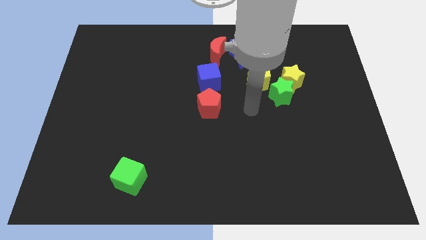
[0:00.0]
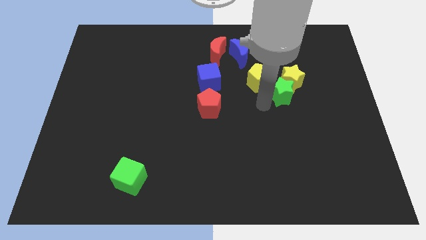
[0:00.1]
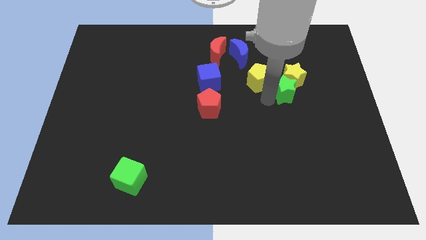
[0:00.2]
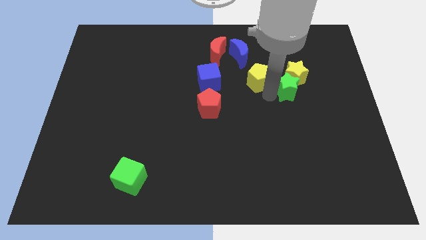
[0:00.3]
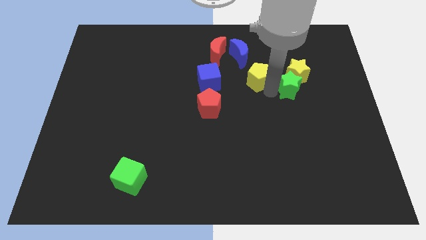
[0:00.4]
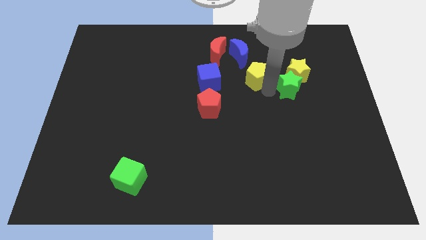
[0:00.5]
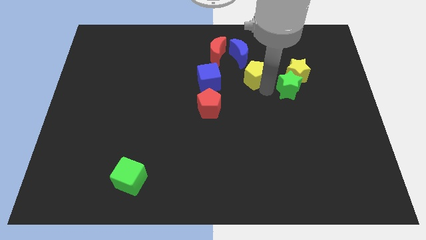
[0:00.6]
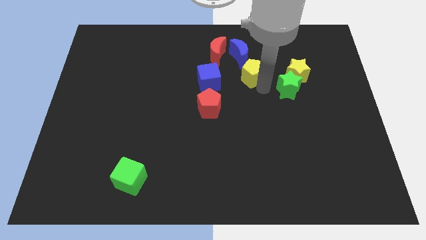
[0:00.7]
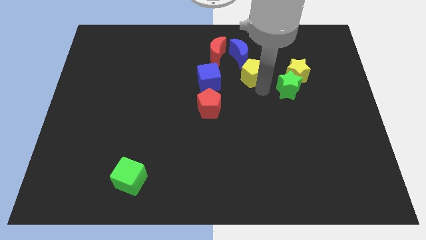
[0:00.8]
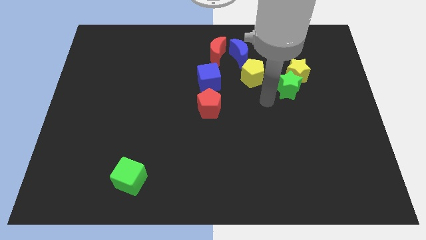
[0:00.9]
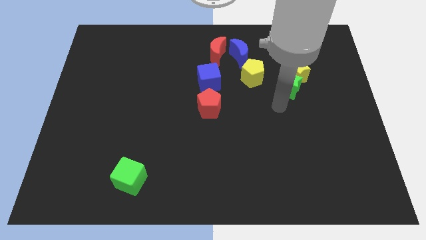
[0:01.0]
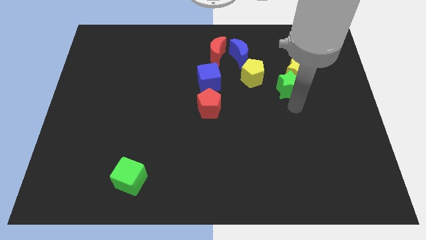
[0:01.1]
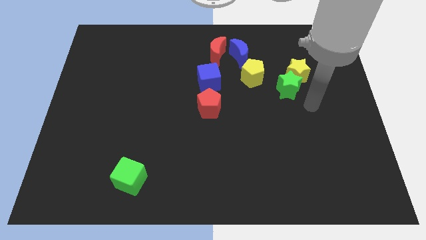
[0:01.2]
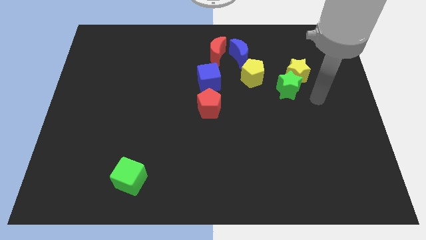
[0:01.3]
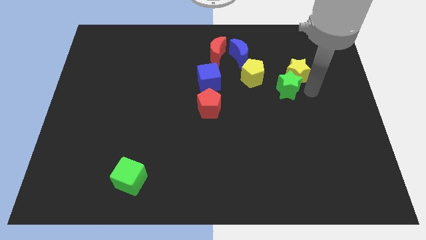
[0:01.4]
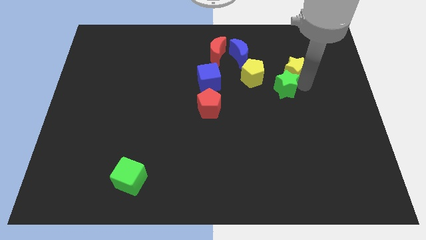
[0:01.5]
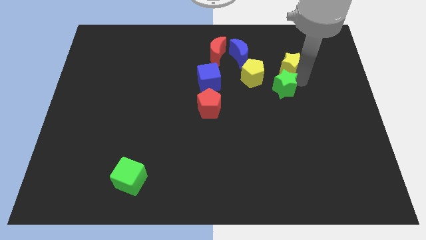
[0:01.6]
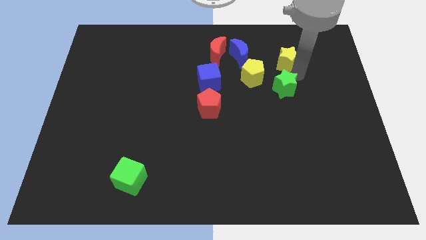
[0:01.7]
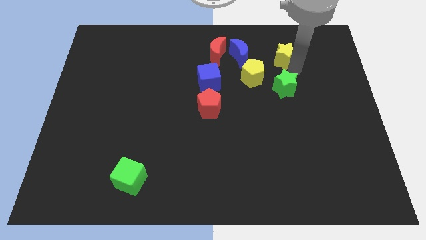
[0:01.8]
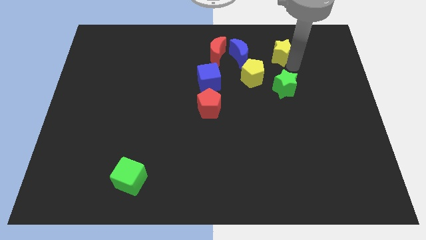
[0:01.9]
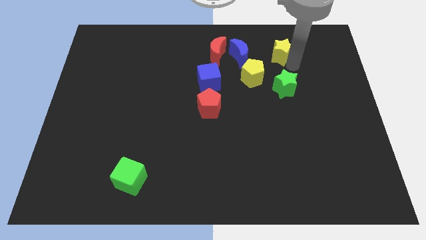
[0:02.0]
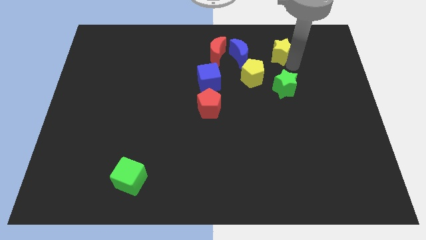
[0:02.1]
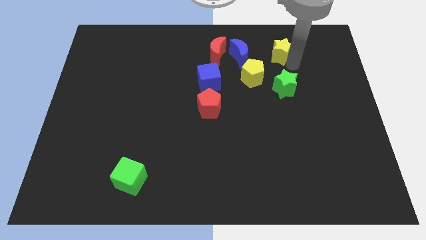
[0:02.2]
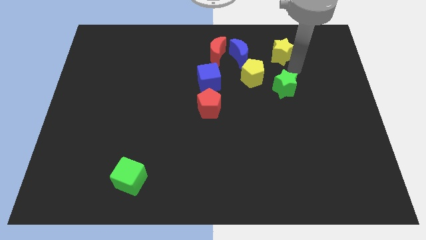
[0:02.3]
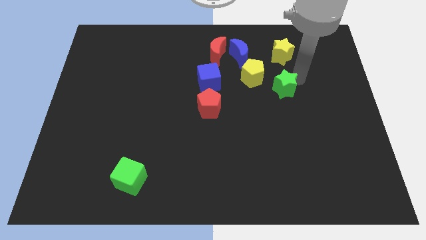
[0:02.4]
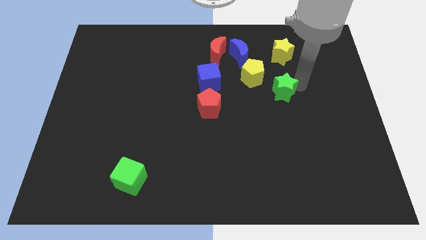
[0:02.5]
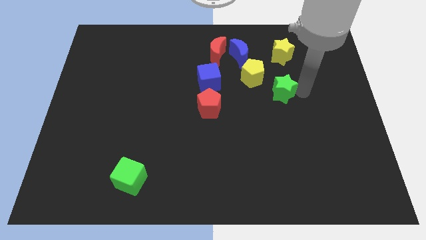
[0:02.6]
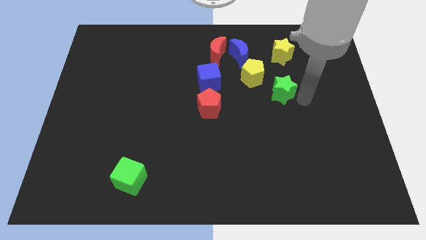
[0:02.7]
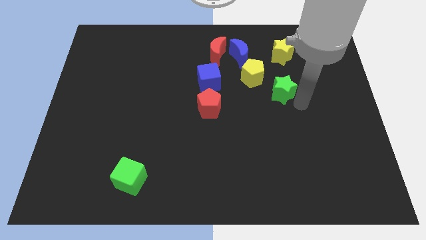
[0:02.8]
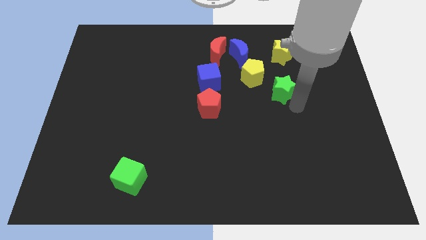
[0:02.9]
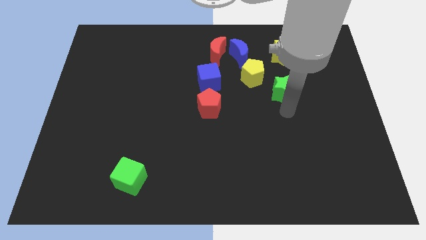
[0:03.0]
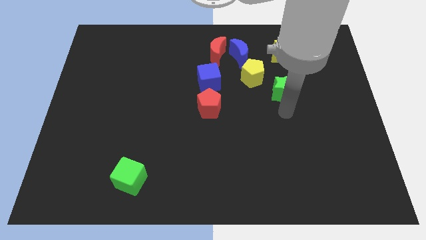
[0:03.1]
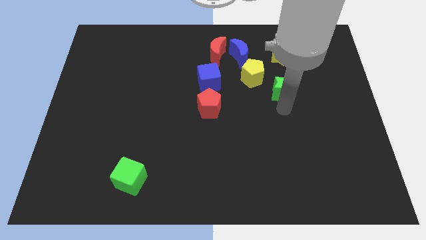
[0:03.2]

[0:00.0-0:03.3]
separate the yellow star and the green star

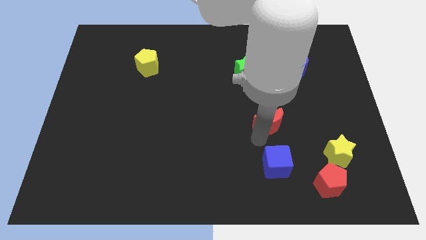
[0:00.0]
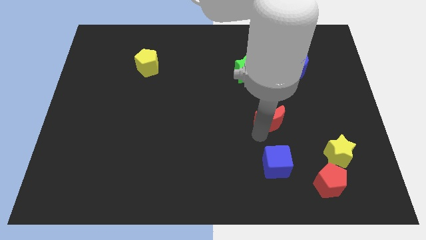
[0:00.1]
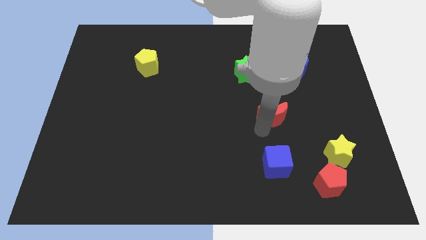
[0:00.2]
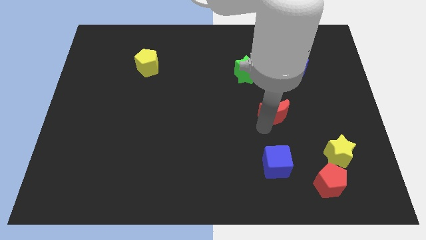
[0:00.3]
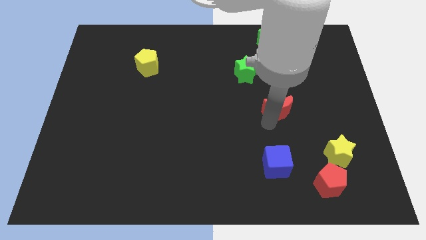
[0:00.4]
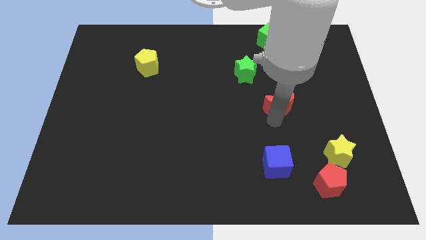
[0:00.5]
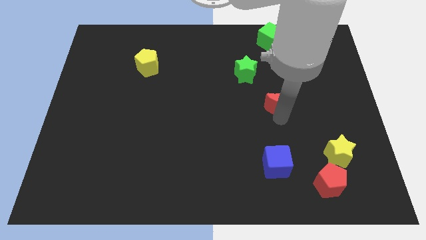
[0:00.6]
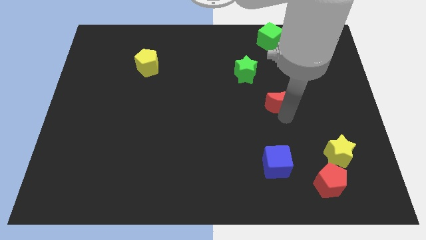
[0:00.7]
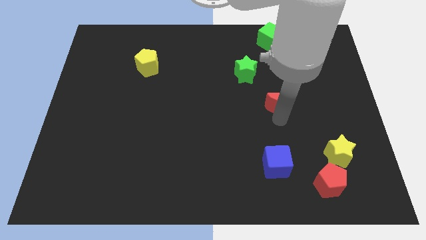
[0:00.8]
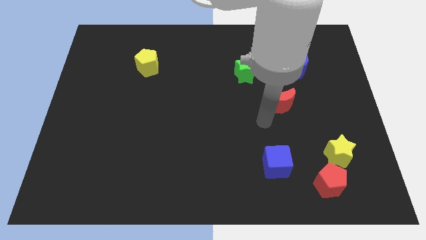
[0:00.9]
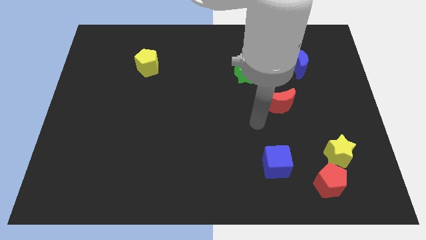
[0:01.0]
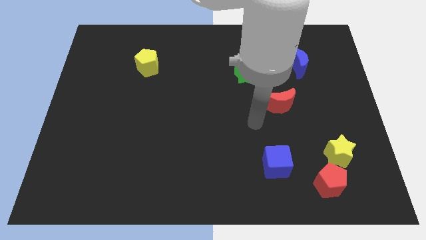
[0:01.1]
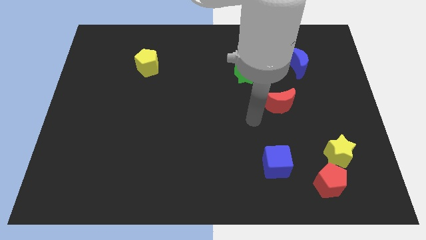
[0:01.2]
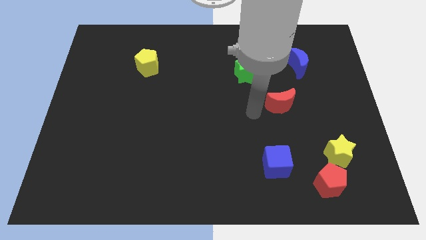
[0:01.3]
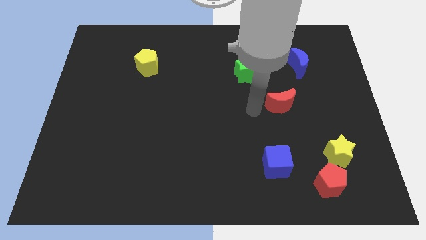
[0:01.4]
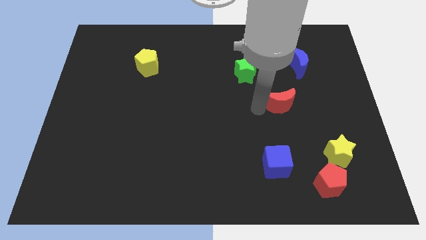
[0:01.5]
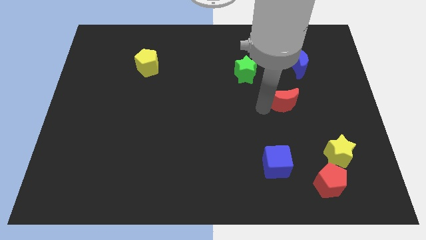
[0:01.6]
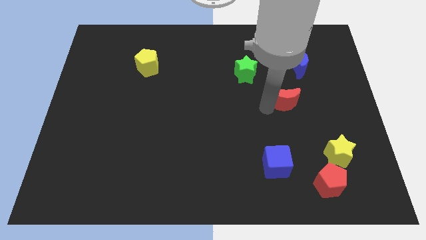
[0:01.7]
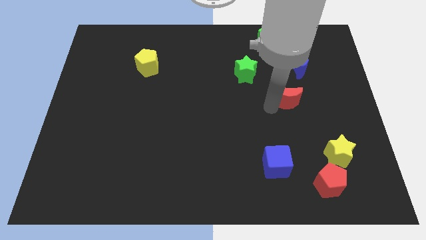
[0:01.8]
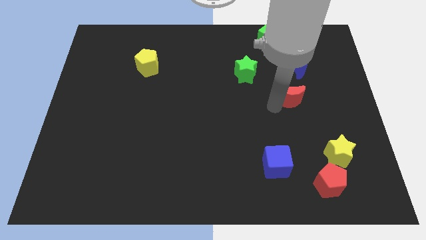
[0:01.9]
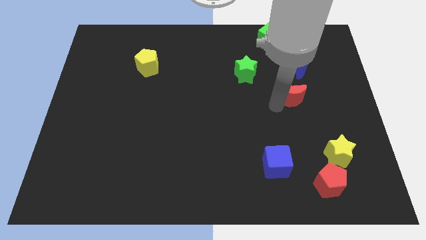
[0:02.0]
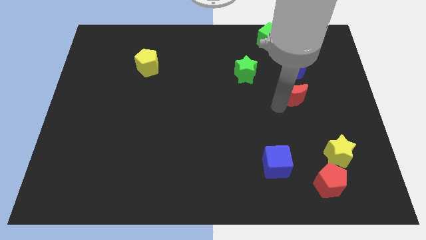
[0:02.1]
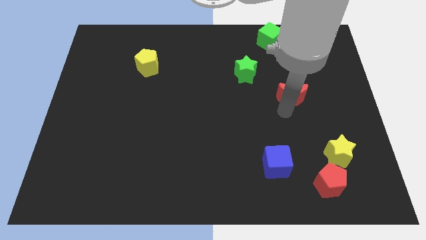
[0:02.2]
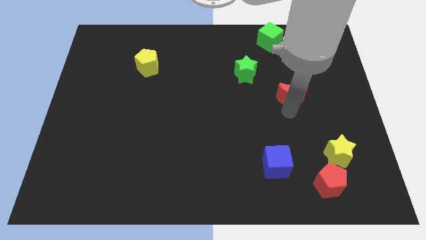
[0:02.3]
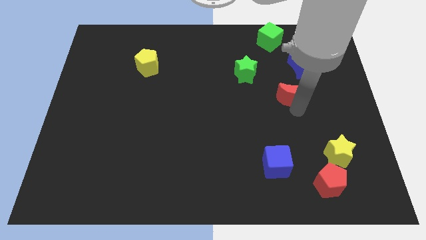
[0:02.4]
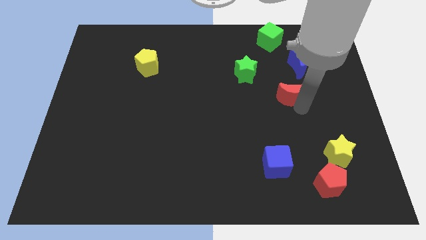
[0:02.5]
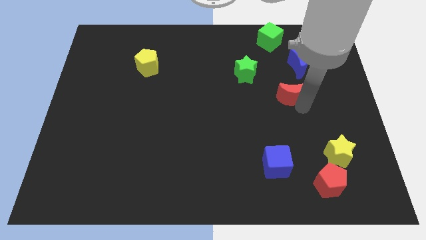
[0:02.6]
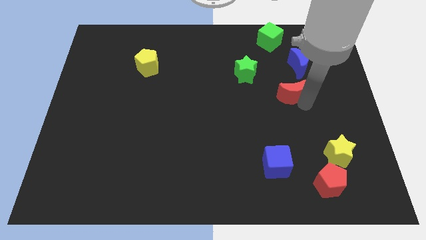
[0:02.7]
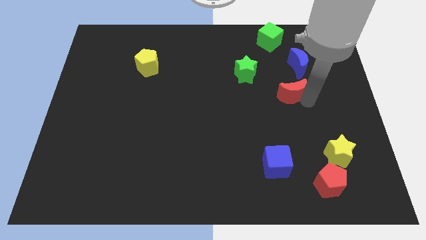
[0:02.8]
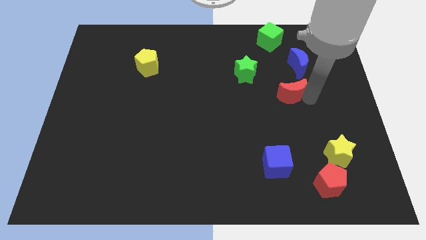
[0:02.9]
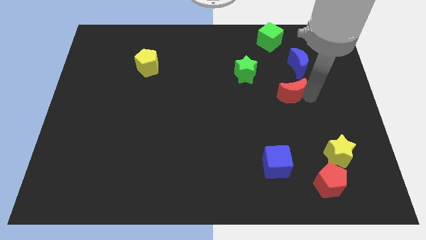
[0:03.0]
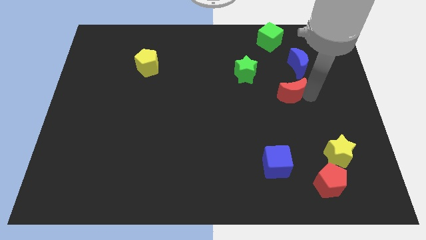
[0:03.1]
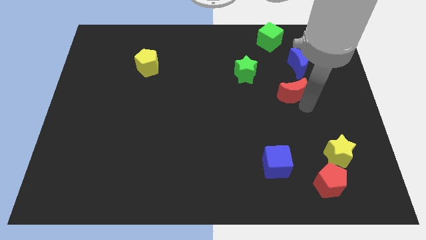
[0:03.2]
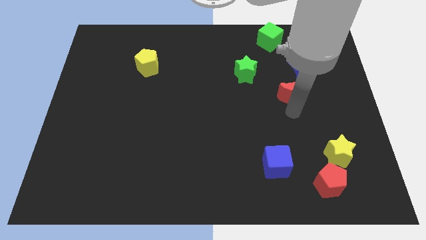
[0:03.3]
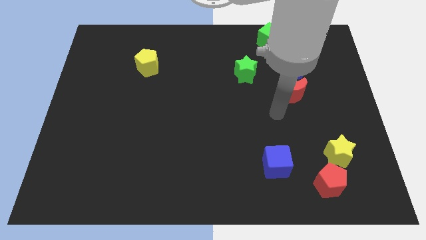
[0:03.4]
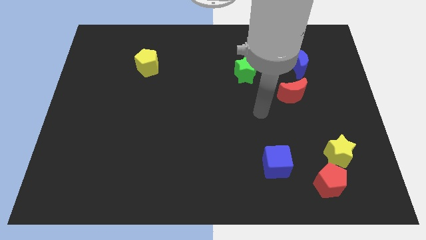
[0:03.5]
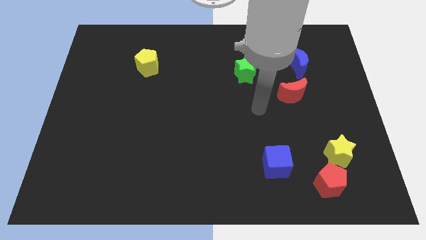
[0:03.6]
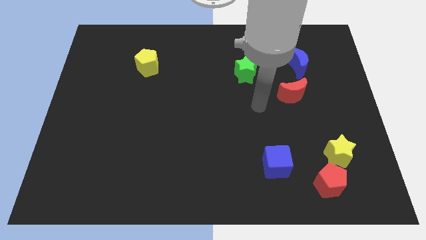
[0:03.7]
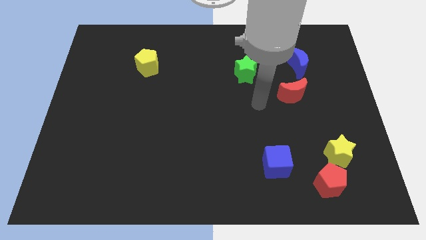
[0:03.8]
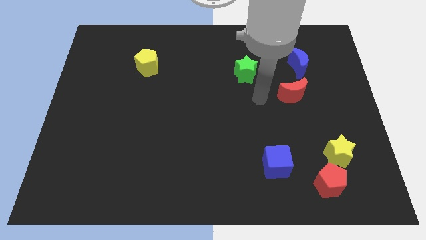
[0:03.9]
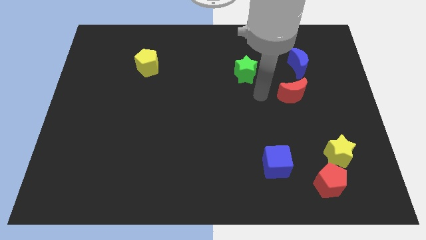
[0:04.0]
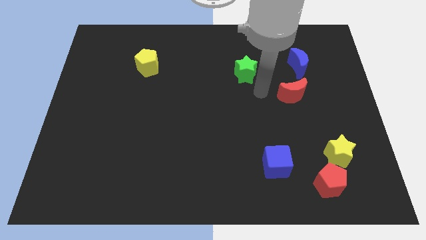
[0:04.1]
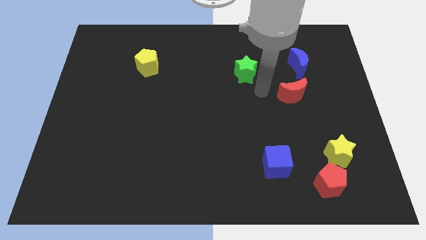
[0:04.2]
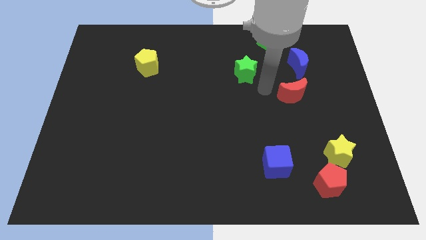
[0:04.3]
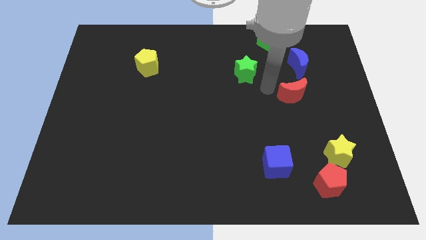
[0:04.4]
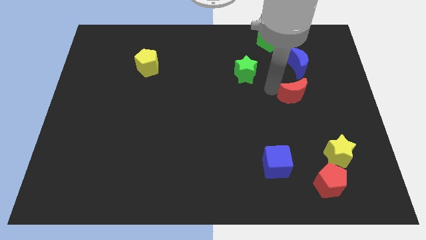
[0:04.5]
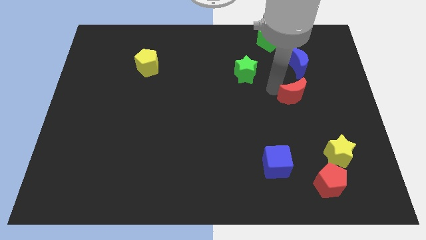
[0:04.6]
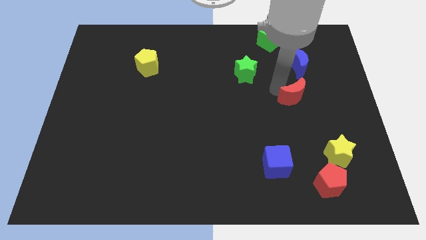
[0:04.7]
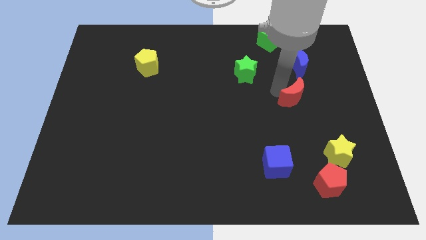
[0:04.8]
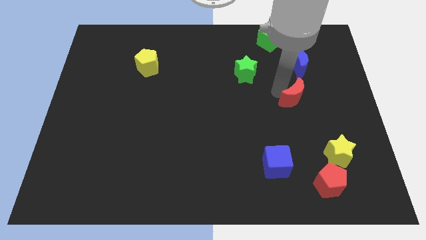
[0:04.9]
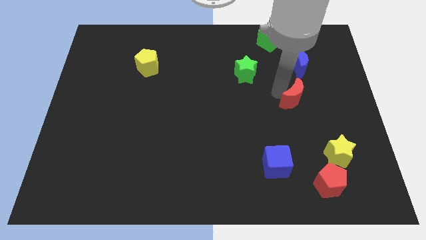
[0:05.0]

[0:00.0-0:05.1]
push the red crescent towards the diagonal left to the blue crescent

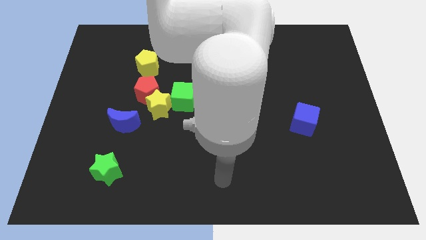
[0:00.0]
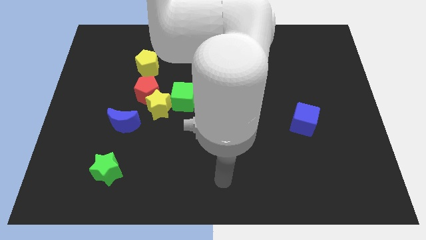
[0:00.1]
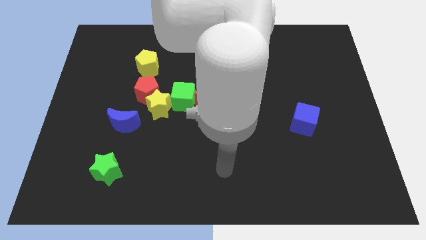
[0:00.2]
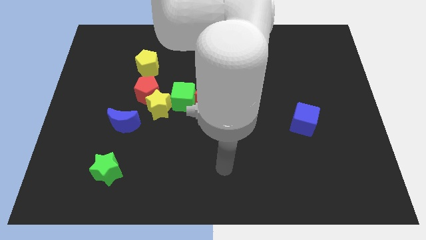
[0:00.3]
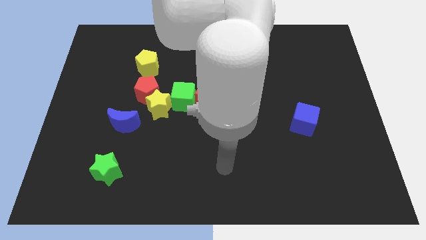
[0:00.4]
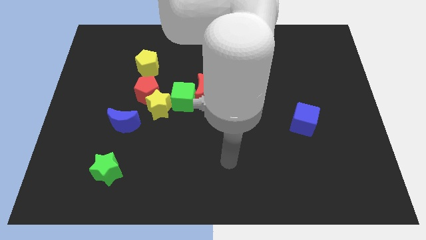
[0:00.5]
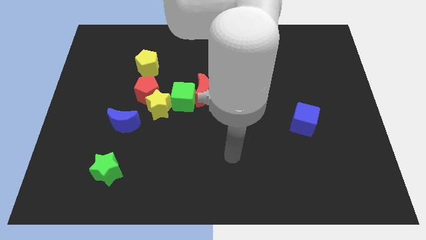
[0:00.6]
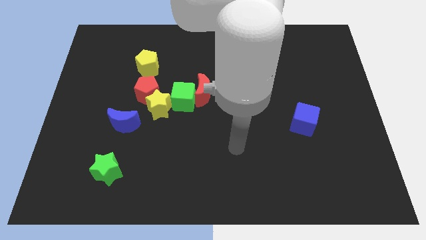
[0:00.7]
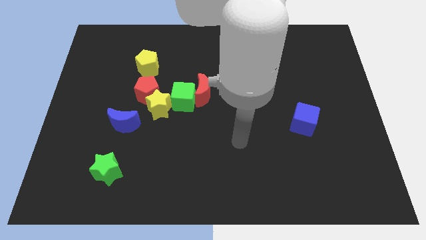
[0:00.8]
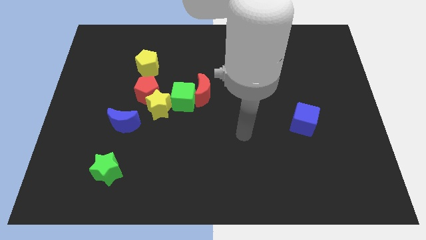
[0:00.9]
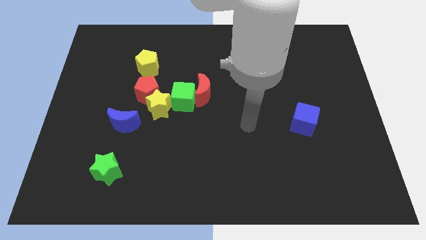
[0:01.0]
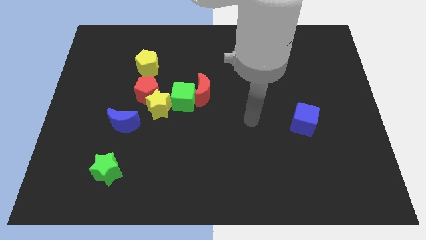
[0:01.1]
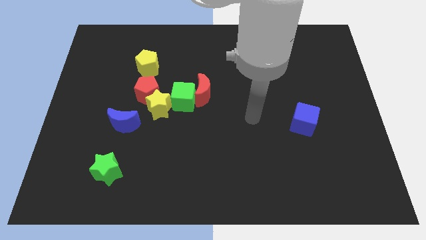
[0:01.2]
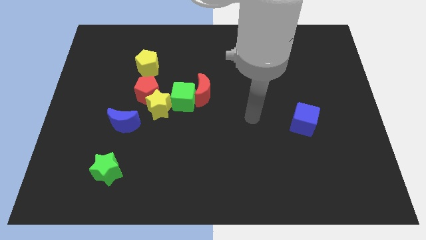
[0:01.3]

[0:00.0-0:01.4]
move your arm slightly upwards
